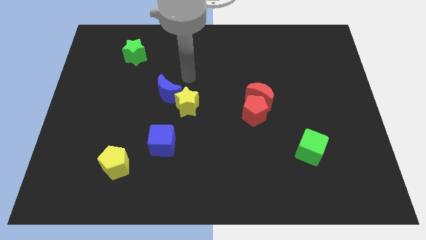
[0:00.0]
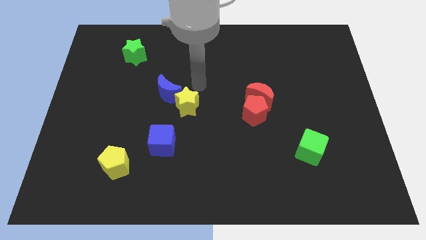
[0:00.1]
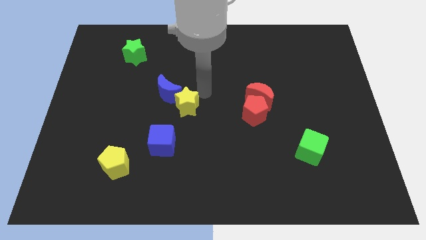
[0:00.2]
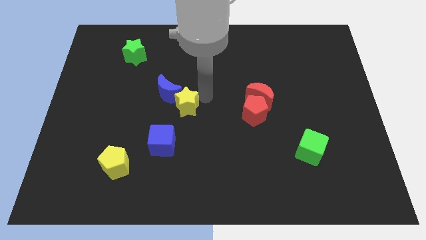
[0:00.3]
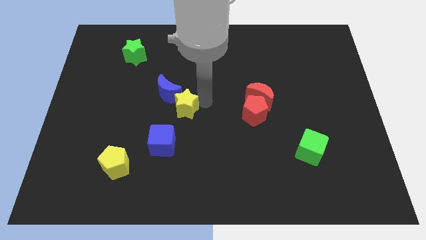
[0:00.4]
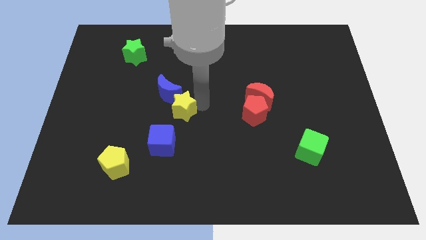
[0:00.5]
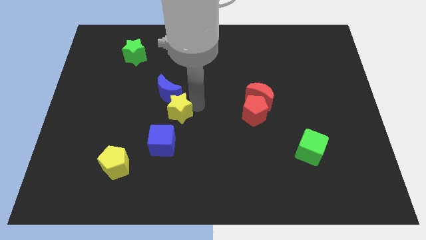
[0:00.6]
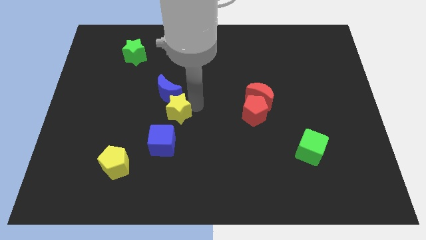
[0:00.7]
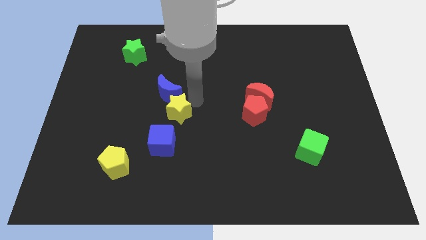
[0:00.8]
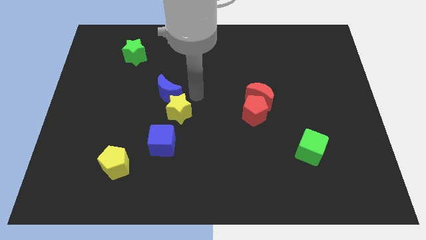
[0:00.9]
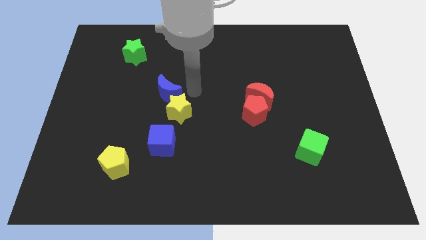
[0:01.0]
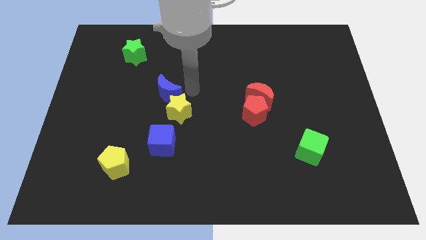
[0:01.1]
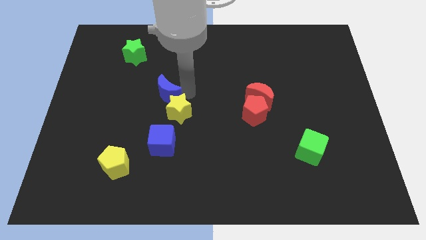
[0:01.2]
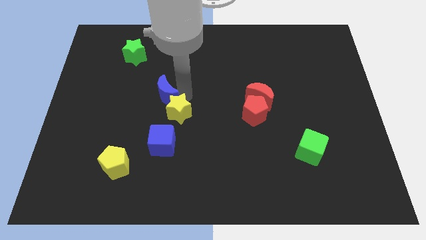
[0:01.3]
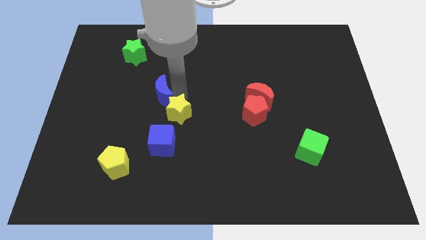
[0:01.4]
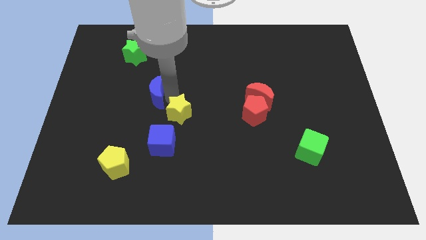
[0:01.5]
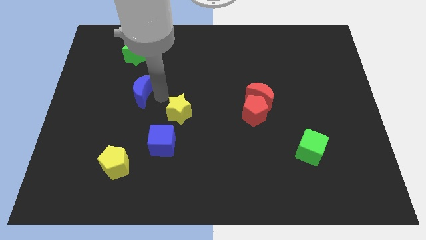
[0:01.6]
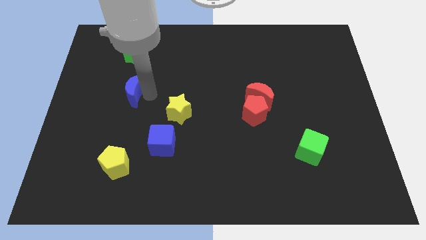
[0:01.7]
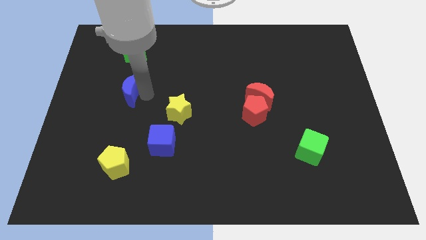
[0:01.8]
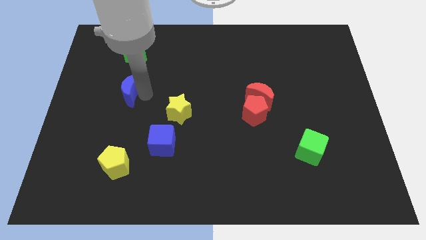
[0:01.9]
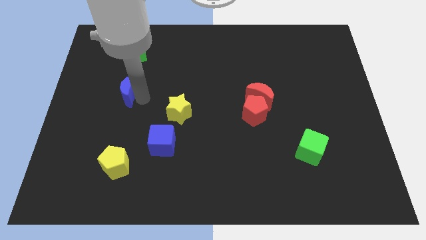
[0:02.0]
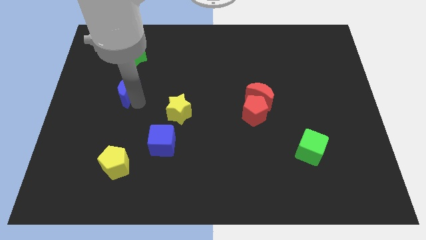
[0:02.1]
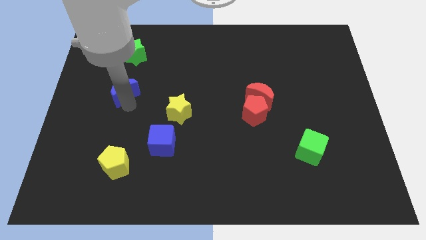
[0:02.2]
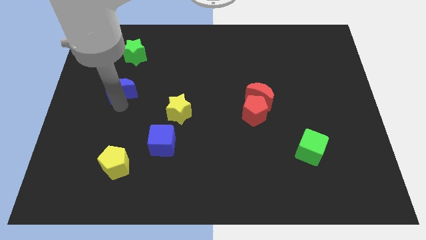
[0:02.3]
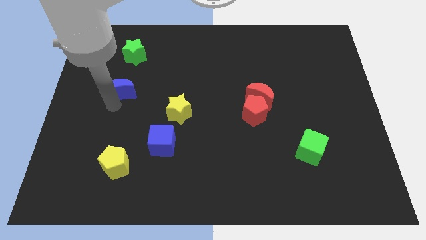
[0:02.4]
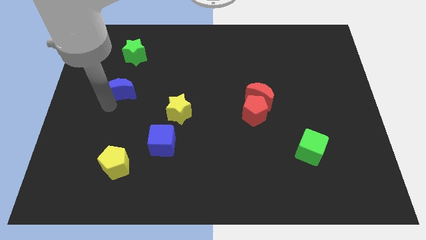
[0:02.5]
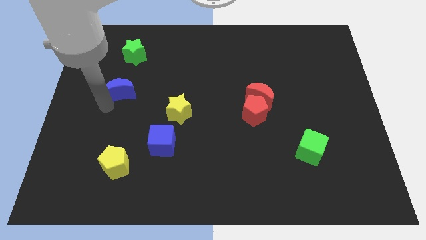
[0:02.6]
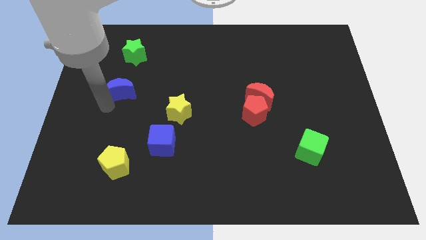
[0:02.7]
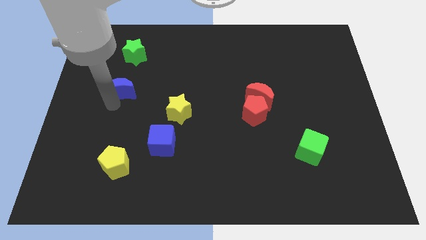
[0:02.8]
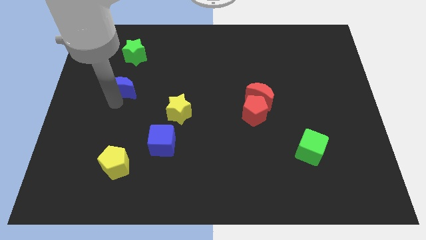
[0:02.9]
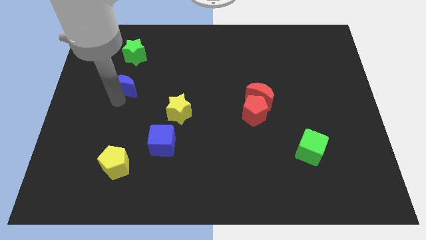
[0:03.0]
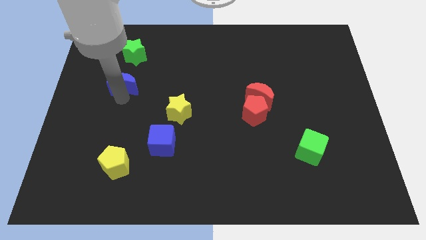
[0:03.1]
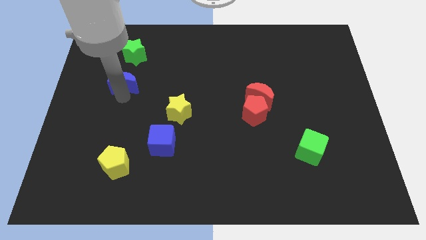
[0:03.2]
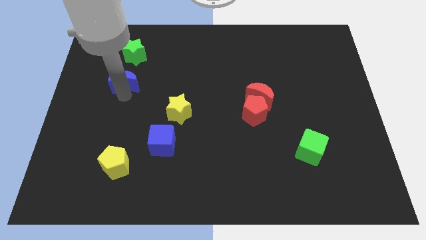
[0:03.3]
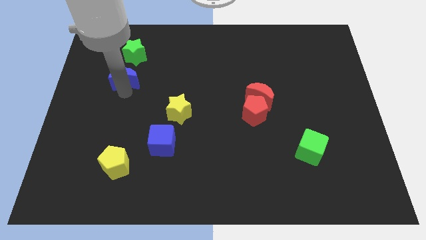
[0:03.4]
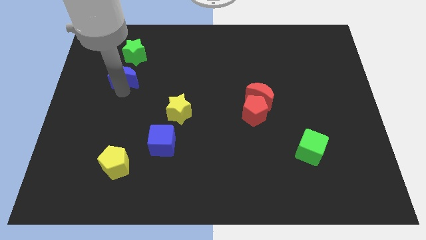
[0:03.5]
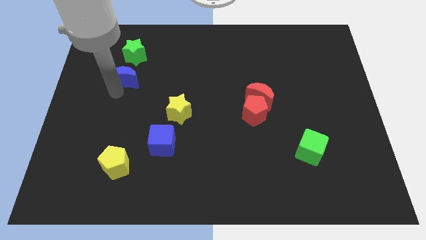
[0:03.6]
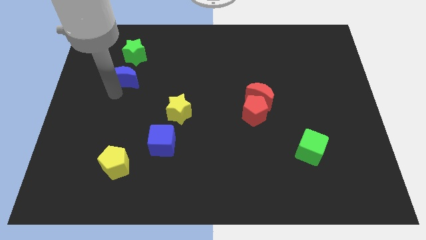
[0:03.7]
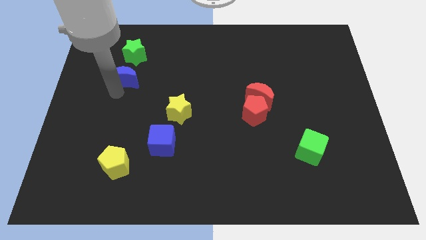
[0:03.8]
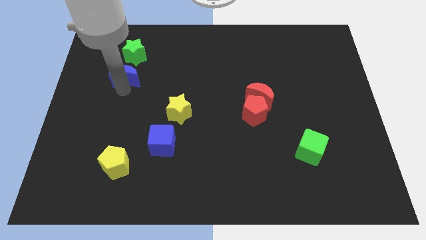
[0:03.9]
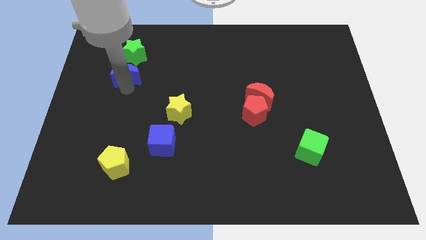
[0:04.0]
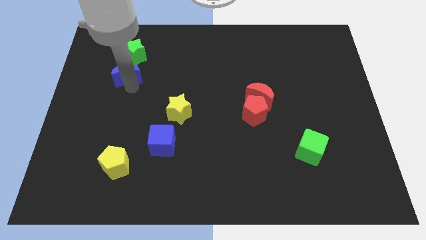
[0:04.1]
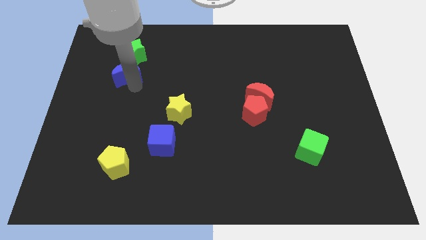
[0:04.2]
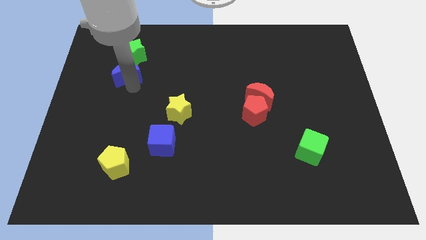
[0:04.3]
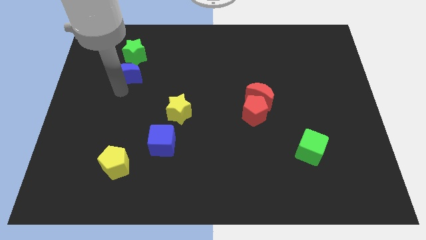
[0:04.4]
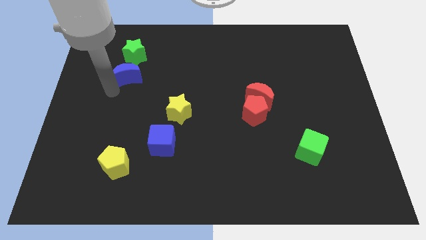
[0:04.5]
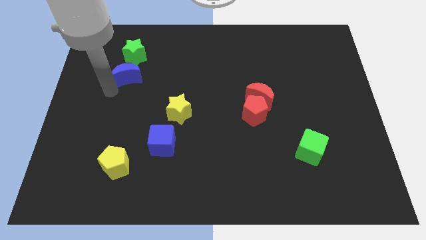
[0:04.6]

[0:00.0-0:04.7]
separate the blue moon from the yellow star

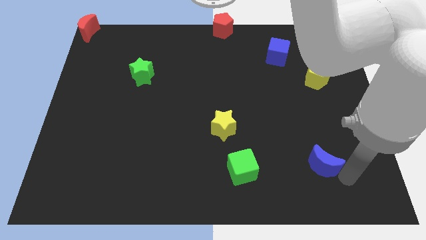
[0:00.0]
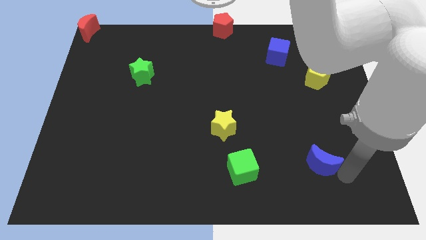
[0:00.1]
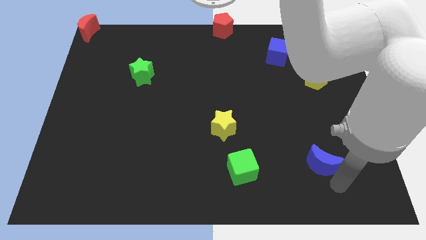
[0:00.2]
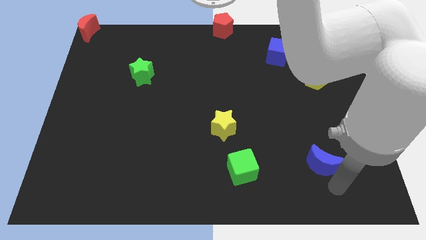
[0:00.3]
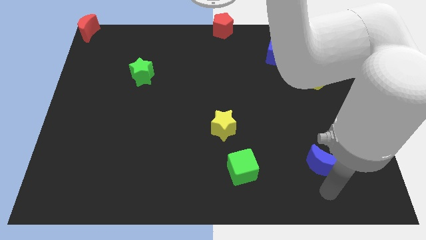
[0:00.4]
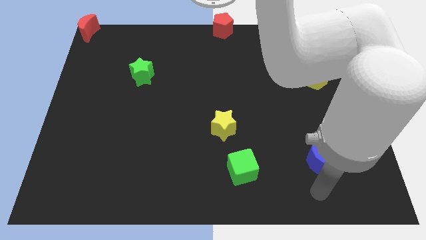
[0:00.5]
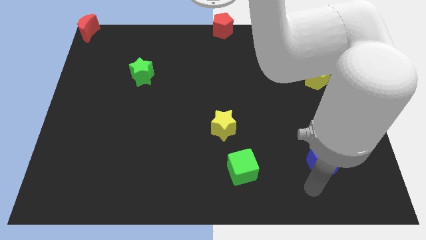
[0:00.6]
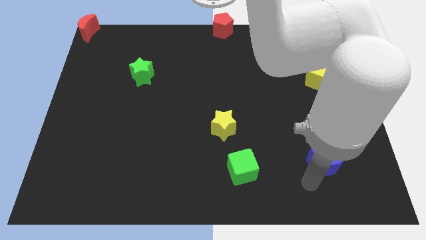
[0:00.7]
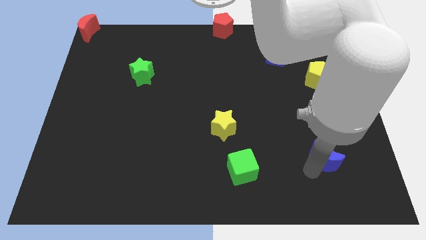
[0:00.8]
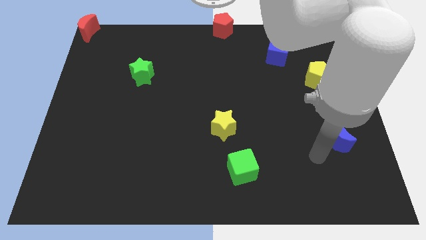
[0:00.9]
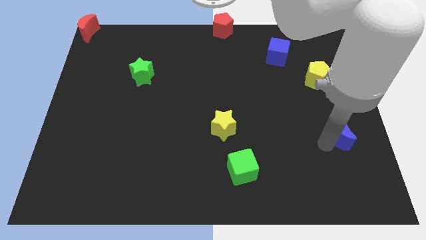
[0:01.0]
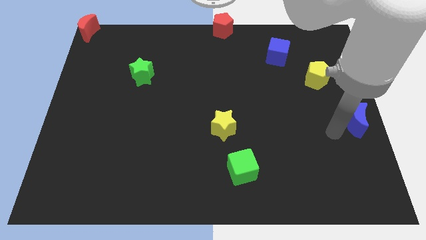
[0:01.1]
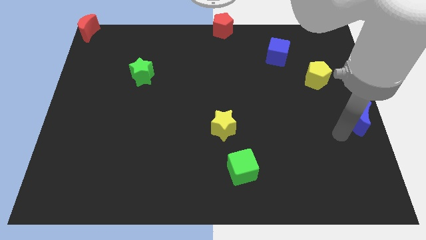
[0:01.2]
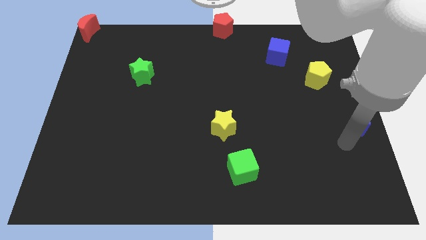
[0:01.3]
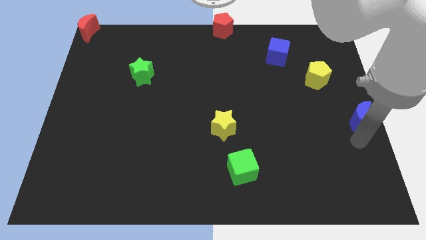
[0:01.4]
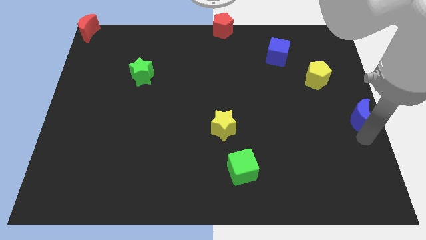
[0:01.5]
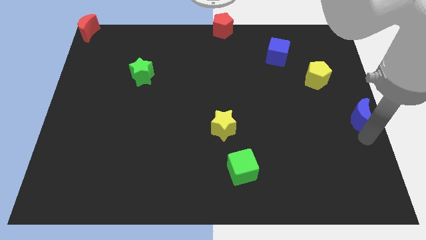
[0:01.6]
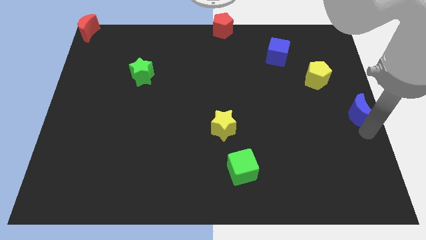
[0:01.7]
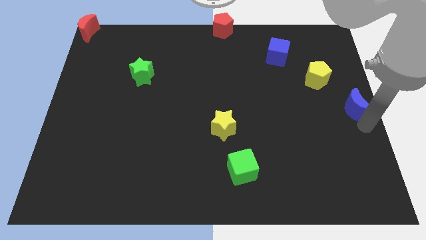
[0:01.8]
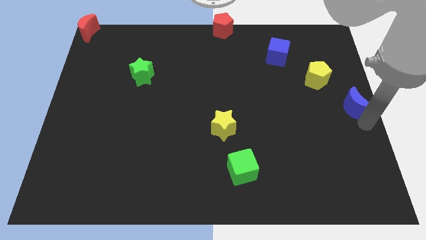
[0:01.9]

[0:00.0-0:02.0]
push the blue crescent to the right center of the board

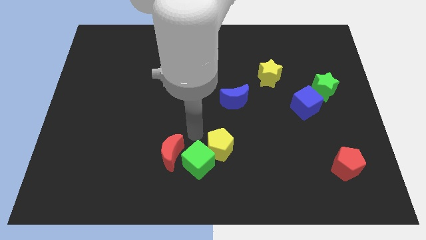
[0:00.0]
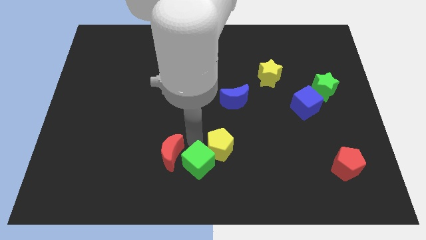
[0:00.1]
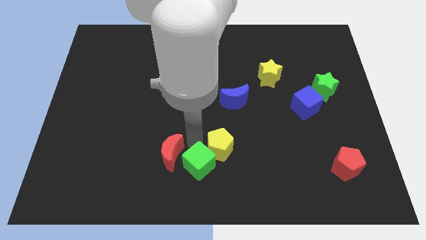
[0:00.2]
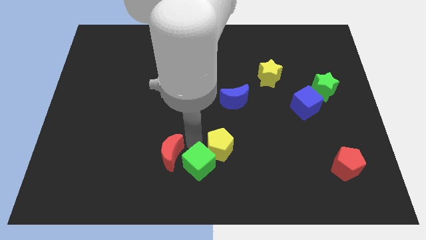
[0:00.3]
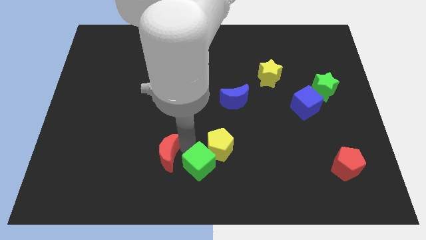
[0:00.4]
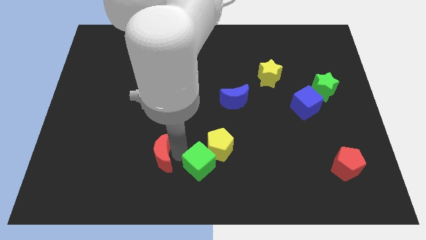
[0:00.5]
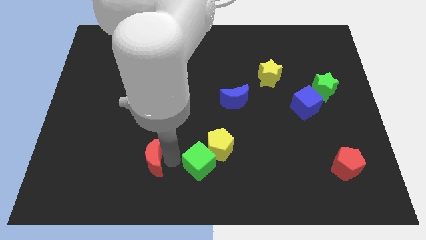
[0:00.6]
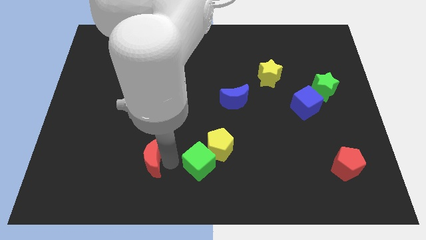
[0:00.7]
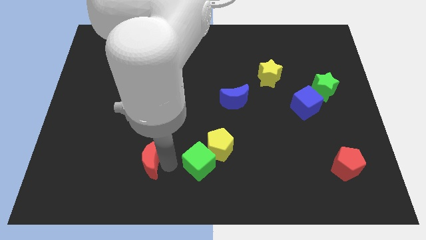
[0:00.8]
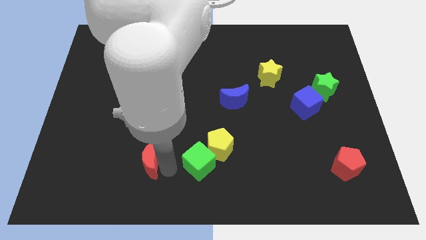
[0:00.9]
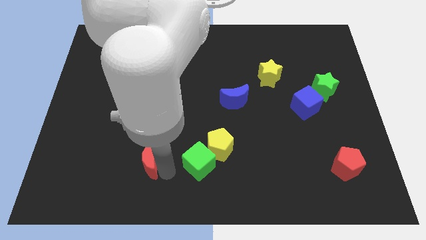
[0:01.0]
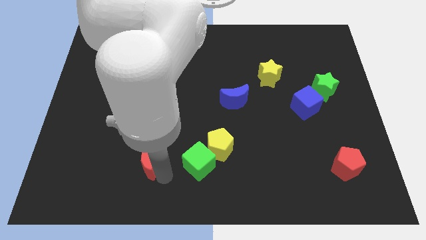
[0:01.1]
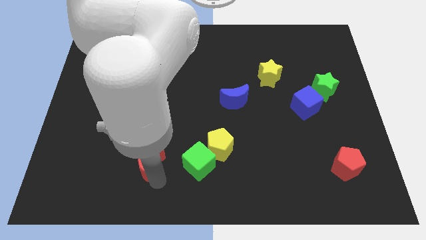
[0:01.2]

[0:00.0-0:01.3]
separate the red moon from green cube

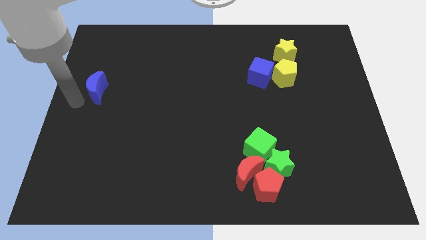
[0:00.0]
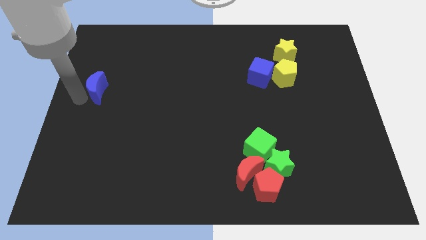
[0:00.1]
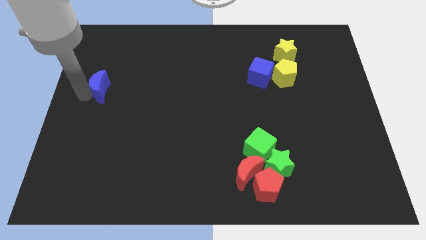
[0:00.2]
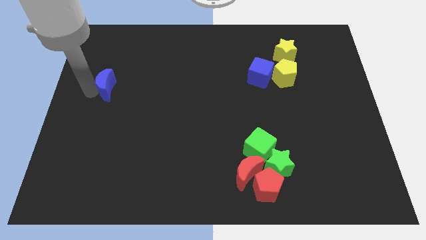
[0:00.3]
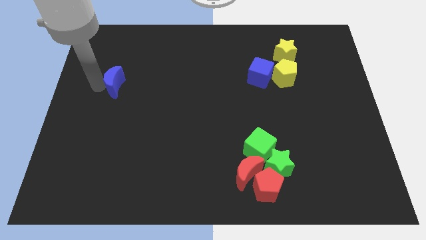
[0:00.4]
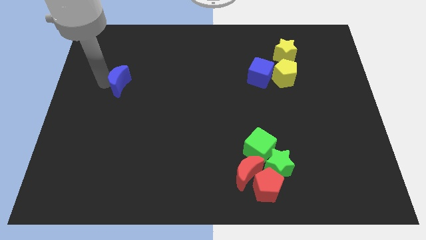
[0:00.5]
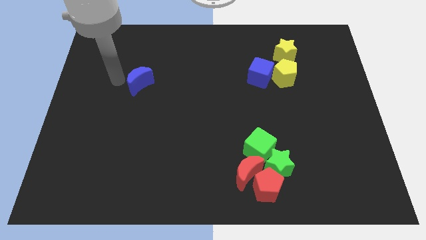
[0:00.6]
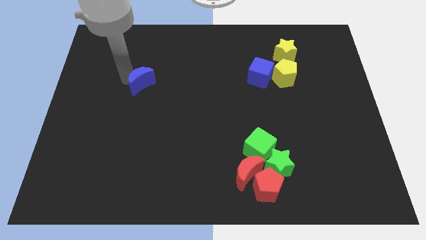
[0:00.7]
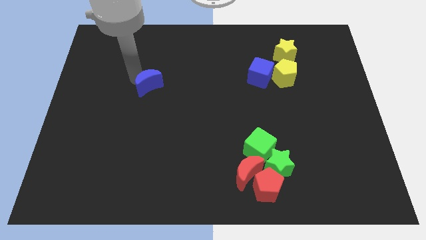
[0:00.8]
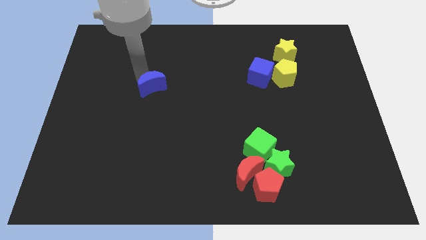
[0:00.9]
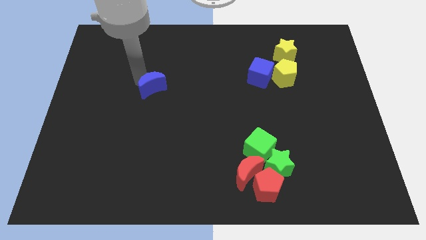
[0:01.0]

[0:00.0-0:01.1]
move the red moon slightly to the right side of the board
